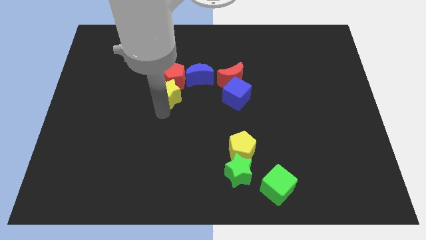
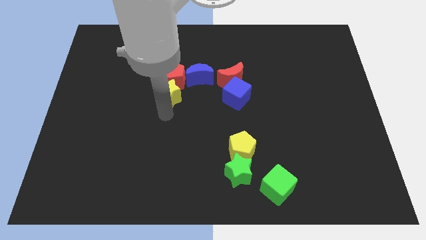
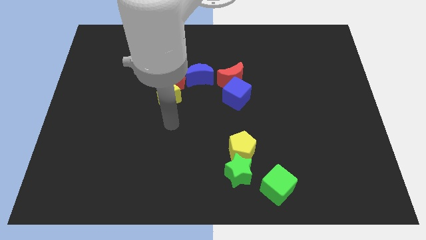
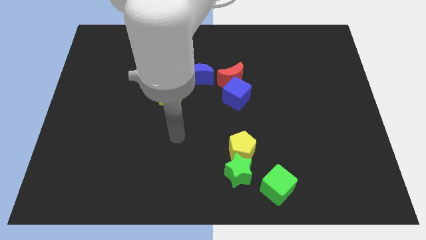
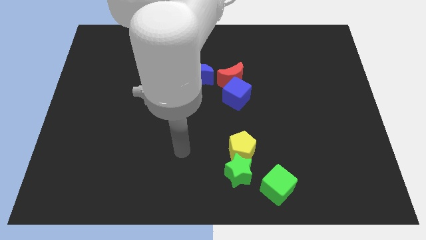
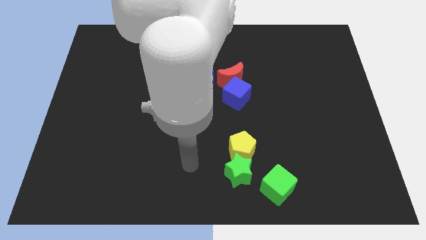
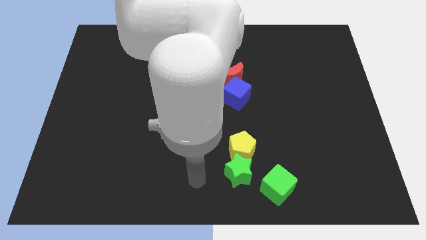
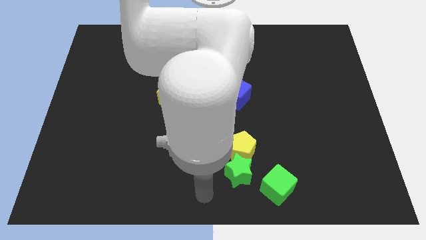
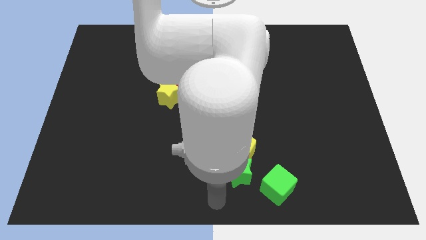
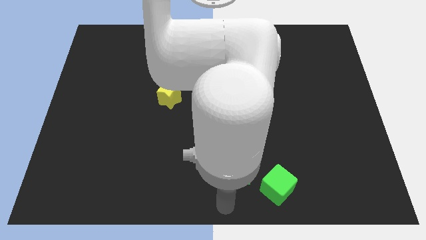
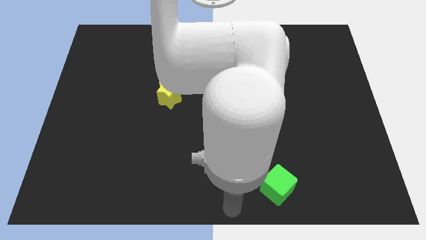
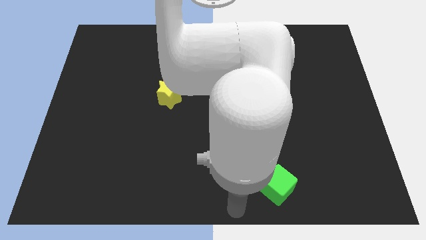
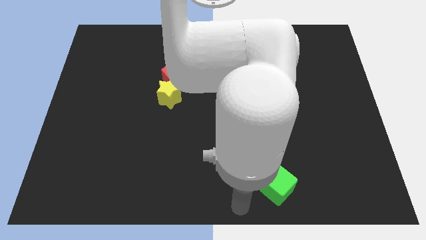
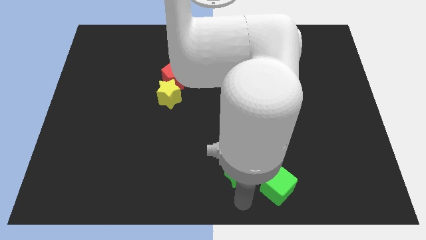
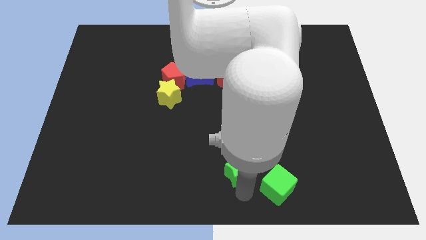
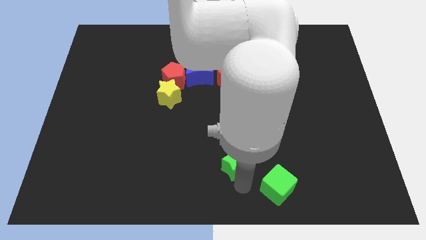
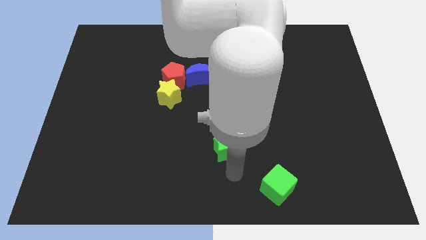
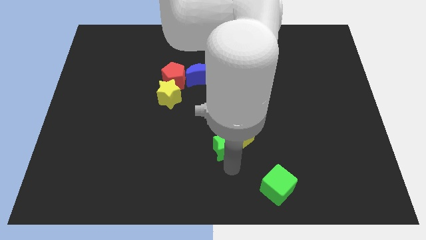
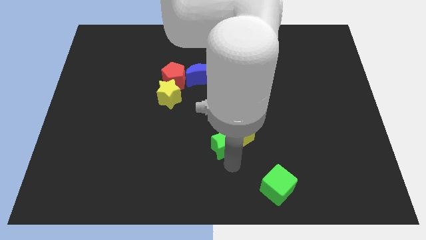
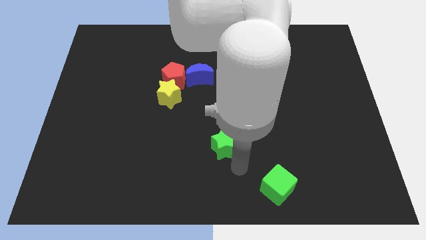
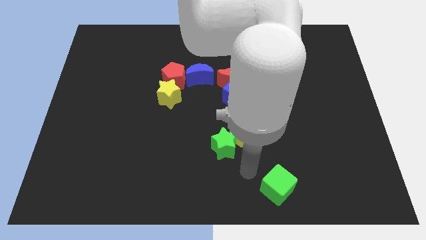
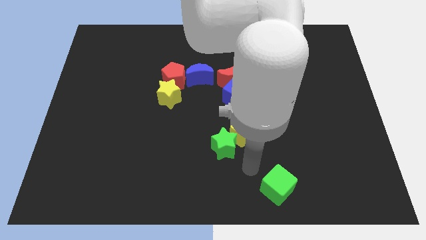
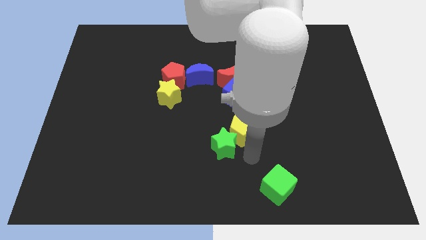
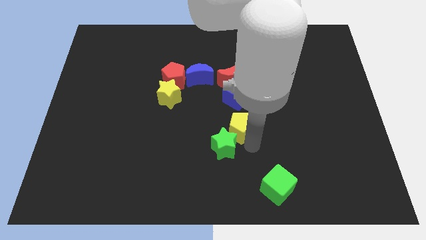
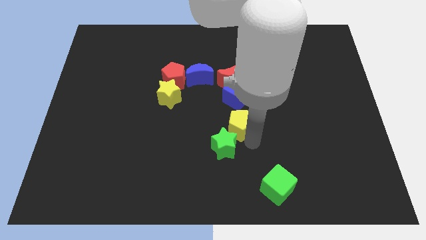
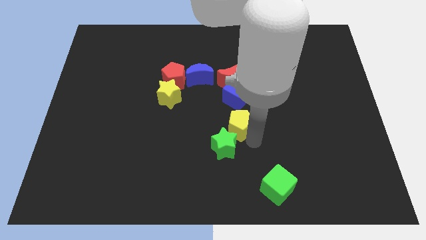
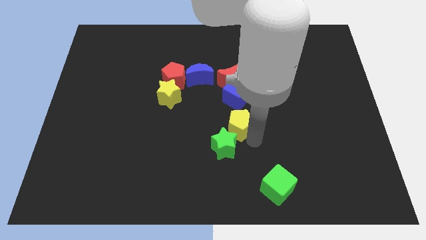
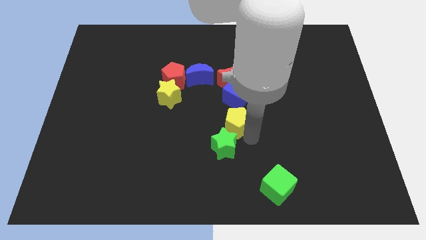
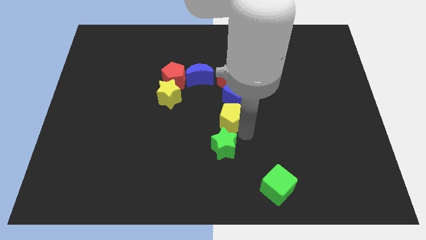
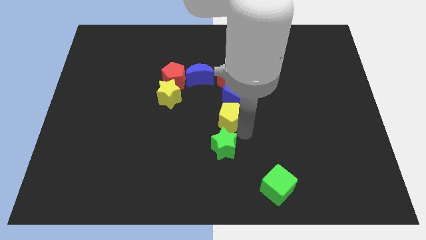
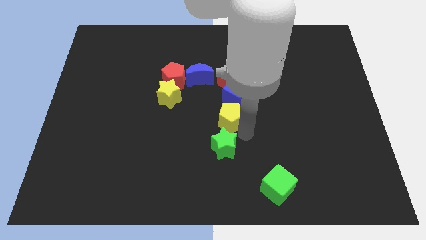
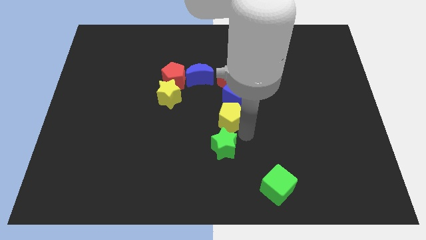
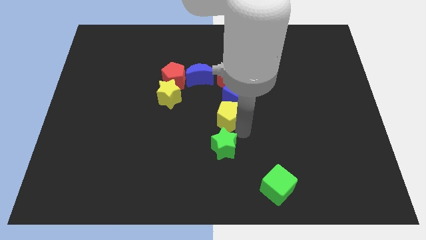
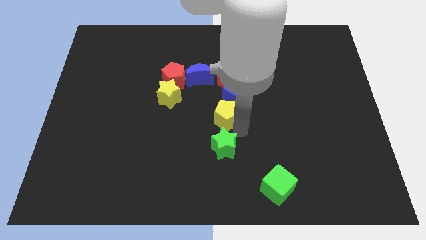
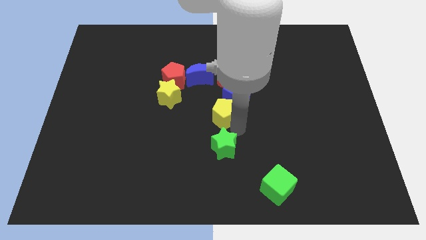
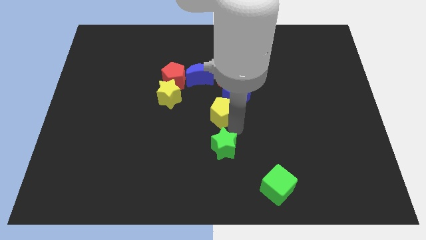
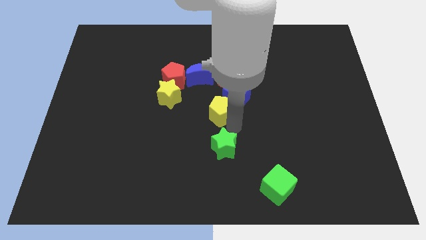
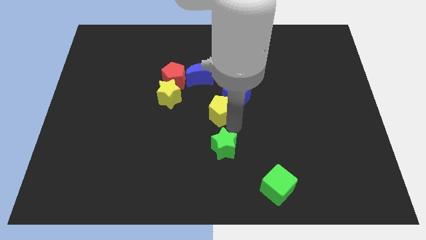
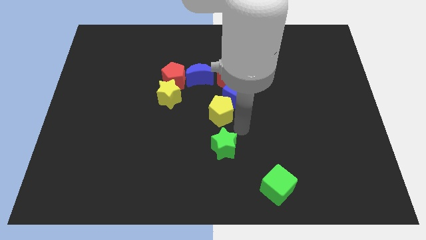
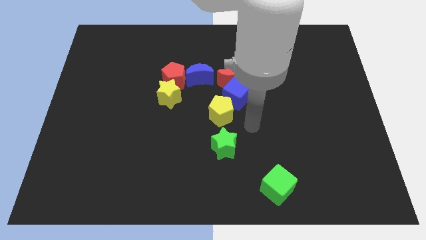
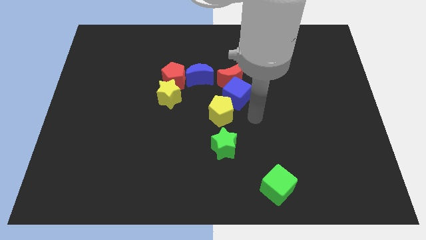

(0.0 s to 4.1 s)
separate the yellow pentagon from the green star

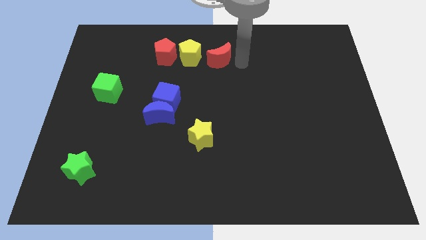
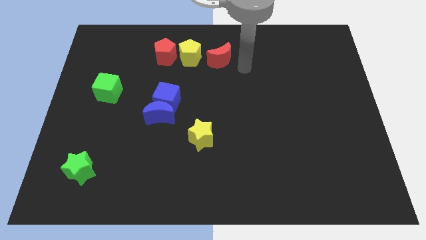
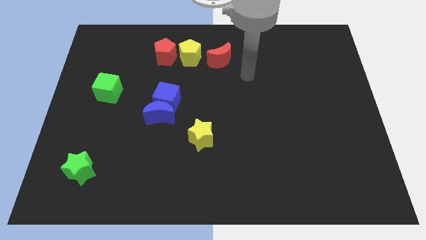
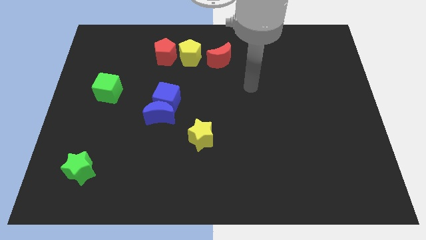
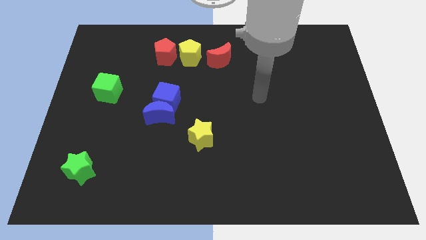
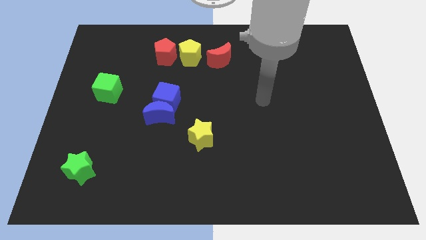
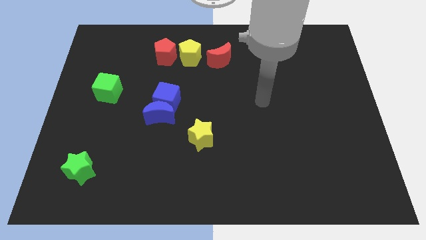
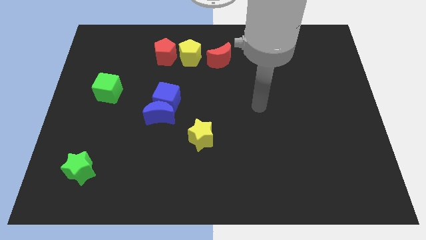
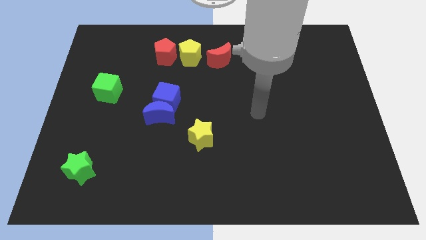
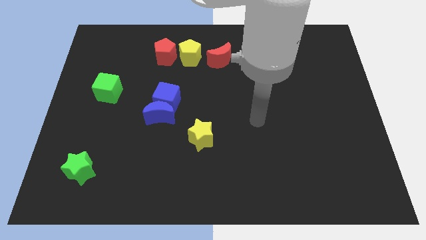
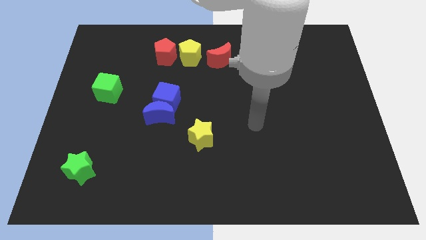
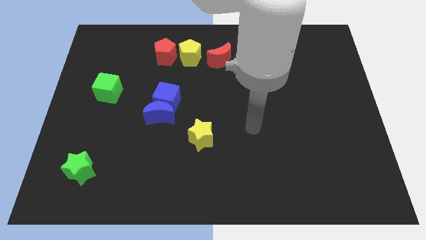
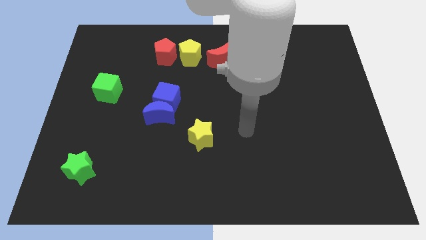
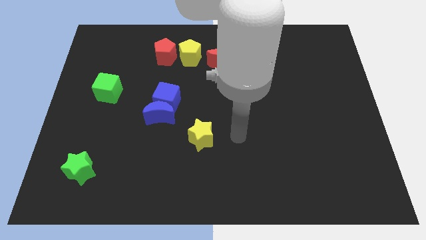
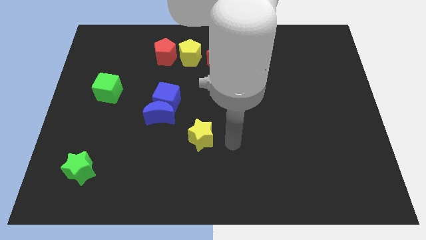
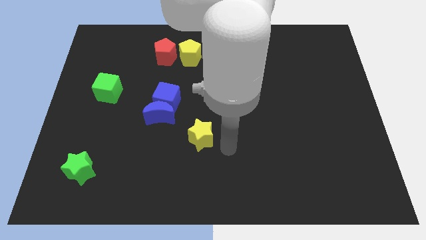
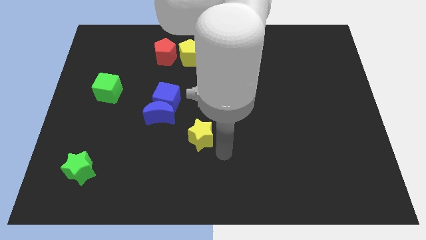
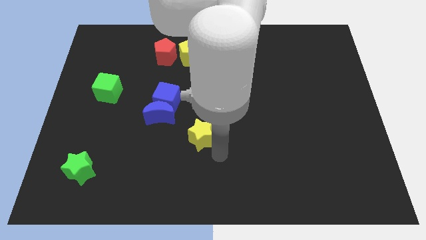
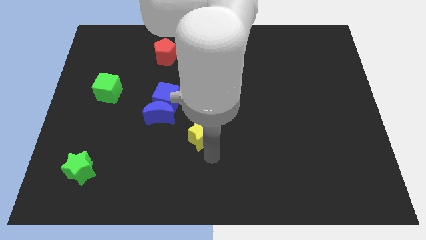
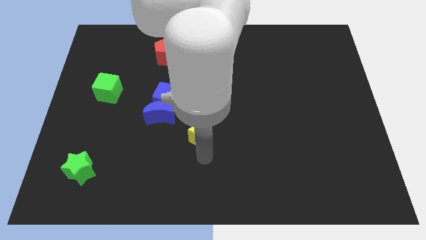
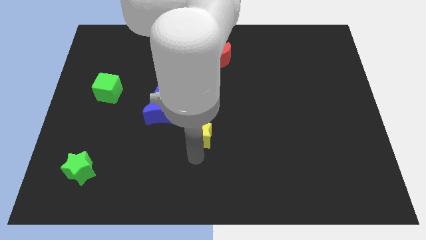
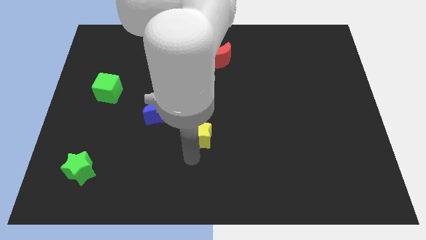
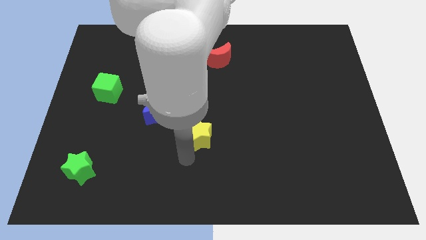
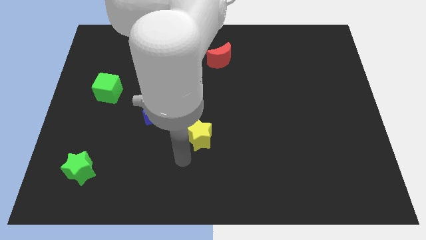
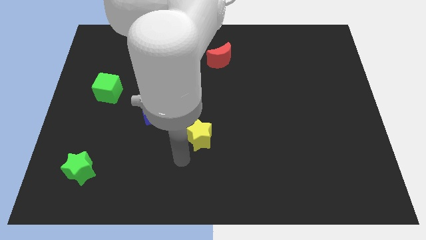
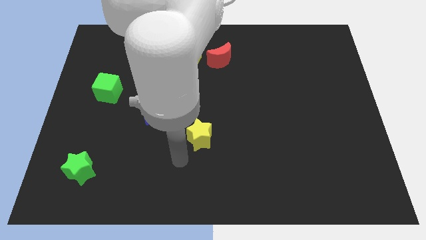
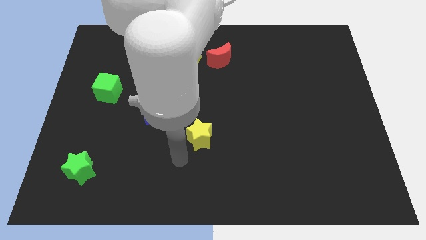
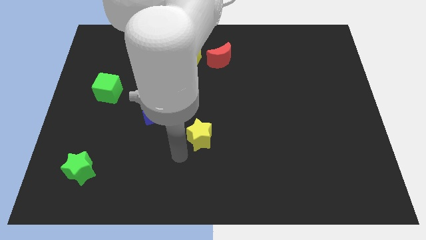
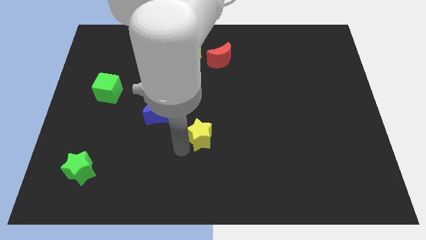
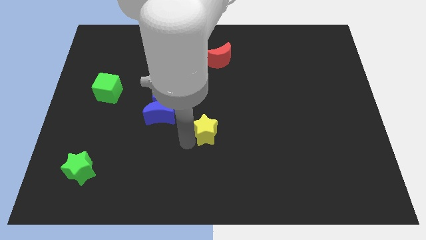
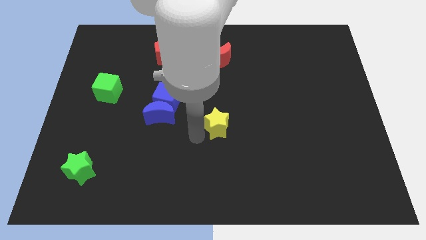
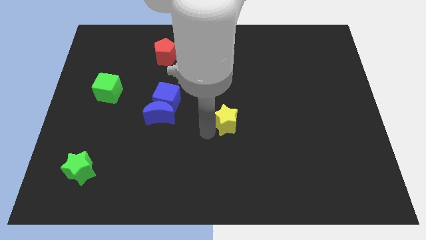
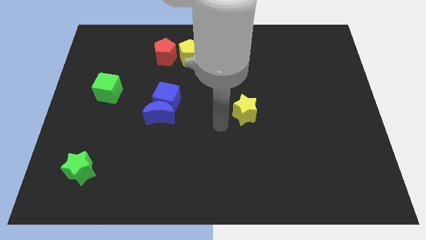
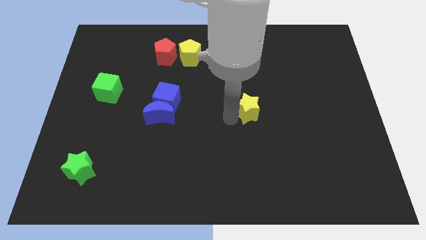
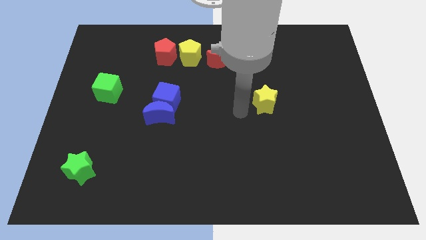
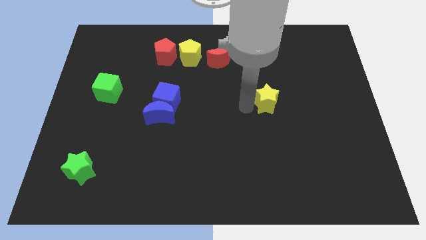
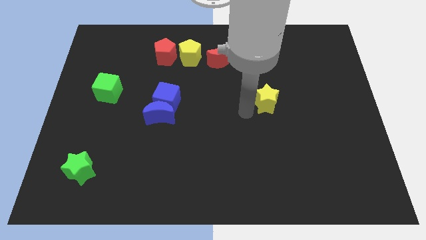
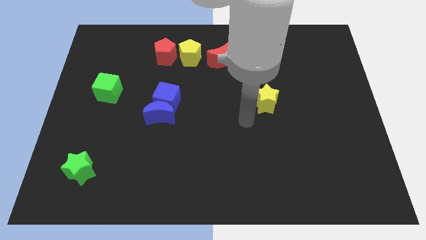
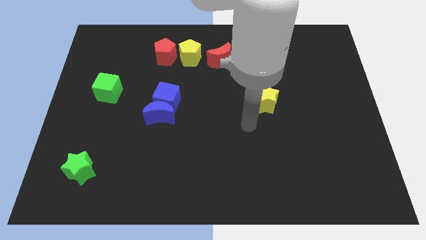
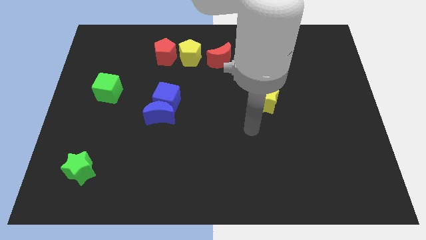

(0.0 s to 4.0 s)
move the yellow star horizontally to the right side of the blue cube

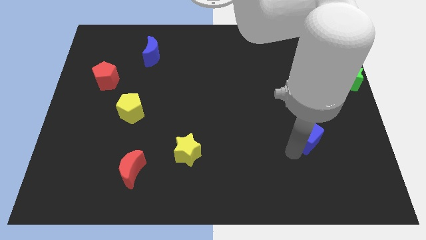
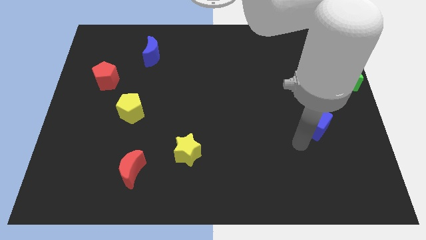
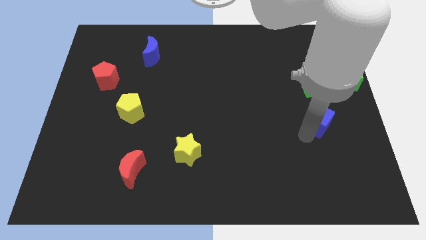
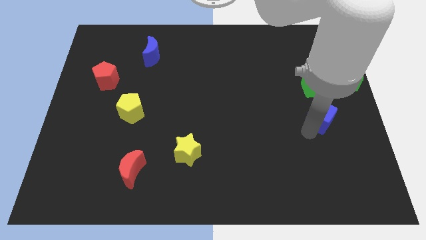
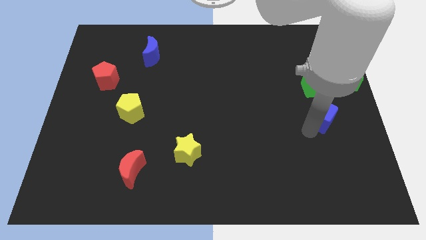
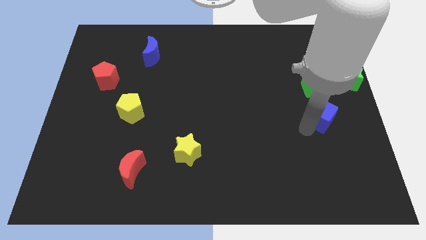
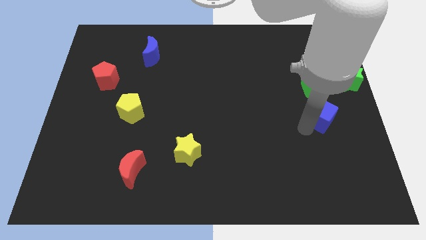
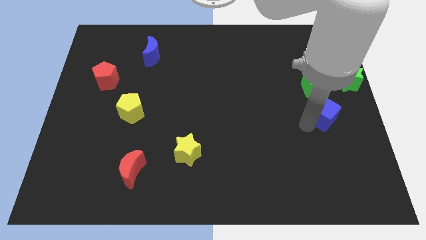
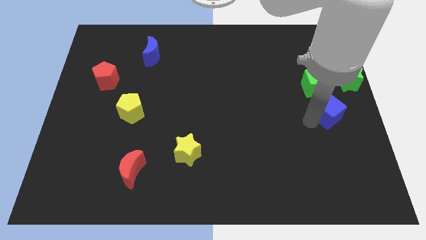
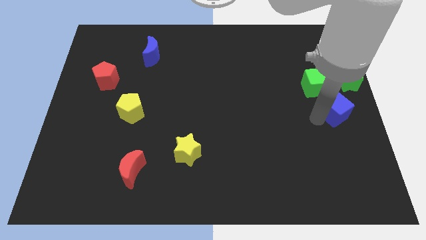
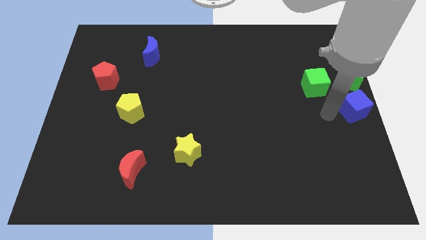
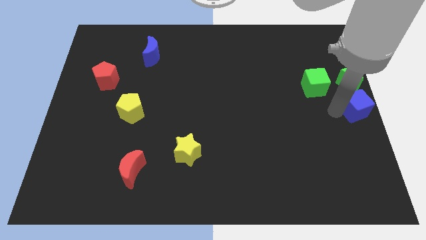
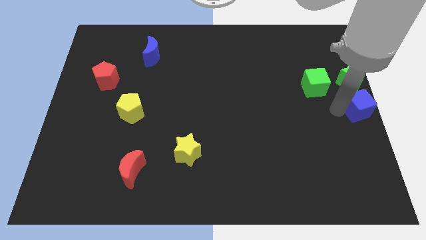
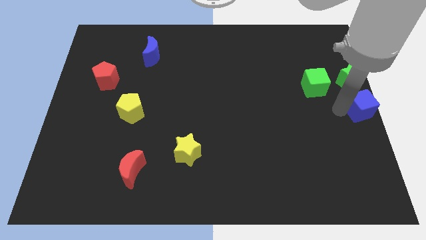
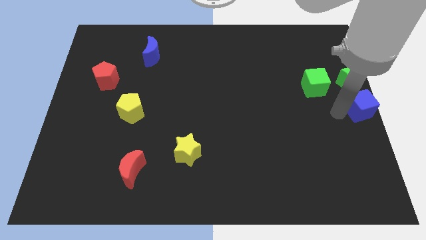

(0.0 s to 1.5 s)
push the blue cube below the green star
